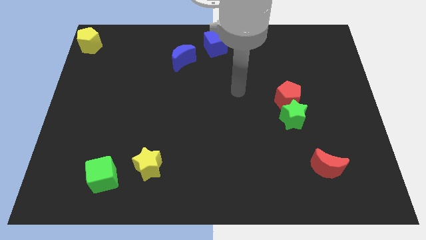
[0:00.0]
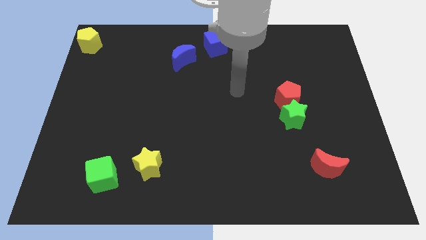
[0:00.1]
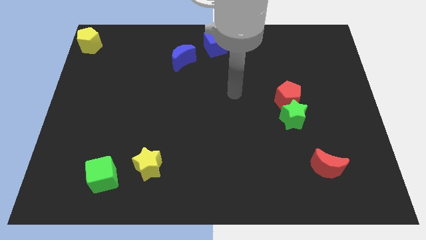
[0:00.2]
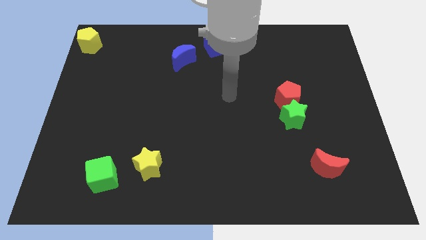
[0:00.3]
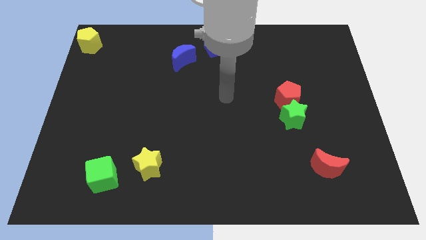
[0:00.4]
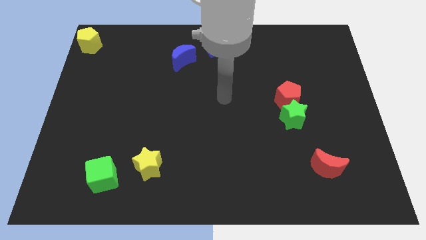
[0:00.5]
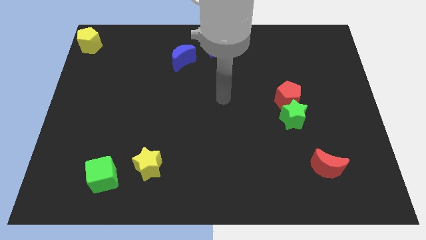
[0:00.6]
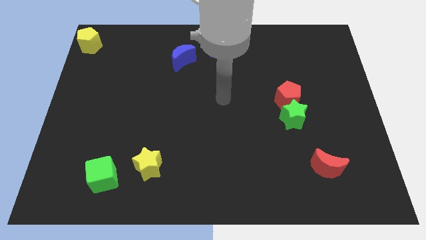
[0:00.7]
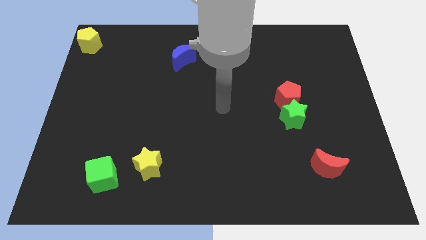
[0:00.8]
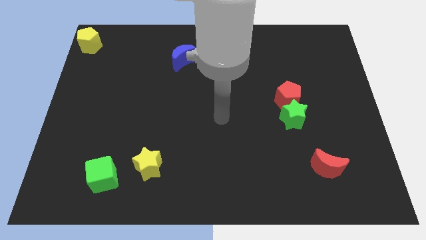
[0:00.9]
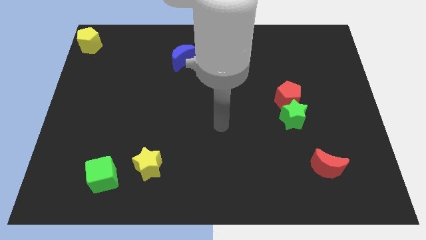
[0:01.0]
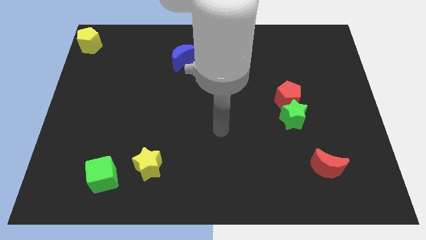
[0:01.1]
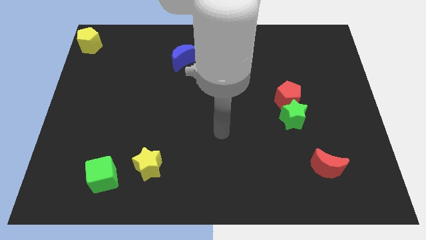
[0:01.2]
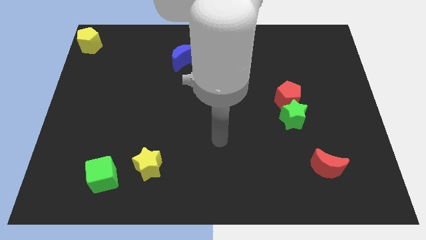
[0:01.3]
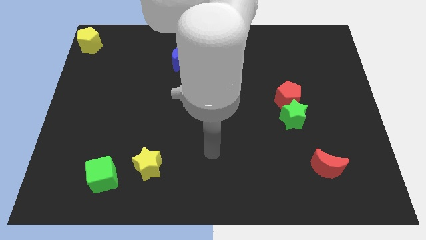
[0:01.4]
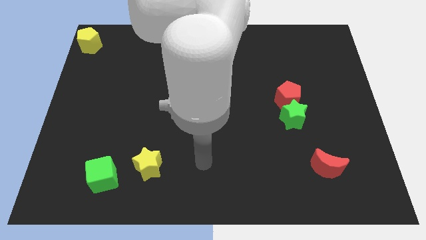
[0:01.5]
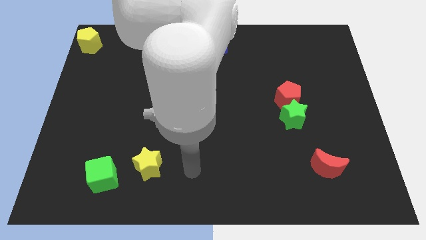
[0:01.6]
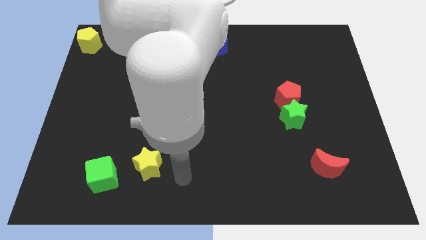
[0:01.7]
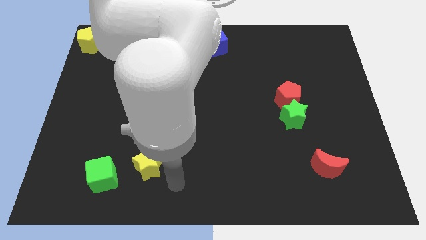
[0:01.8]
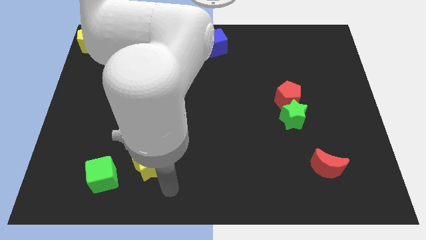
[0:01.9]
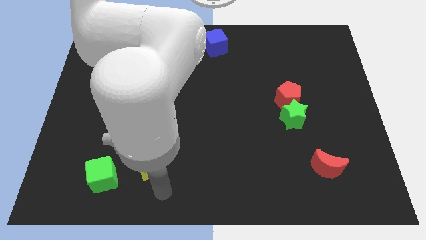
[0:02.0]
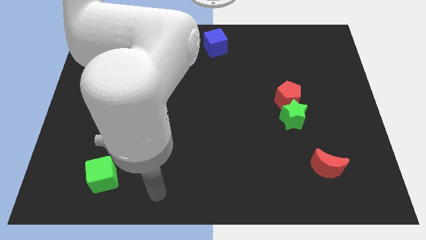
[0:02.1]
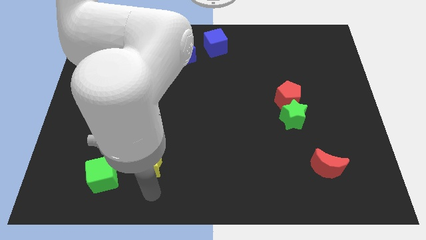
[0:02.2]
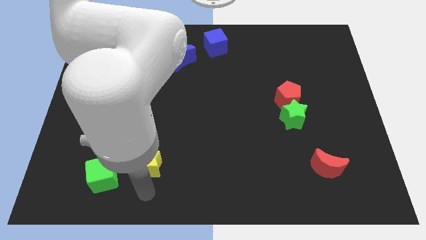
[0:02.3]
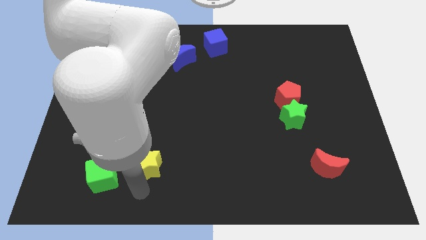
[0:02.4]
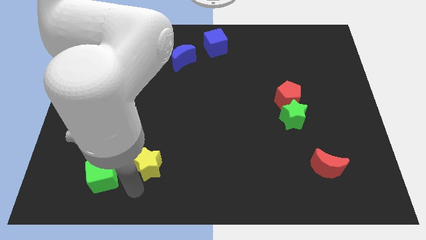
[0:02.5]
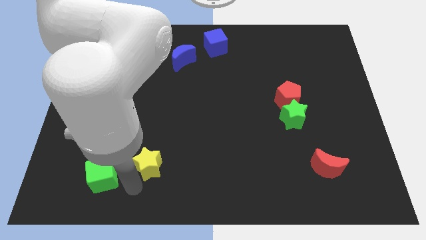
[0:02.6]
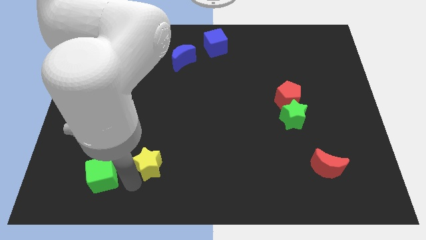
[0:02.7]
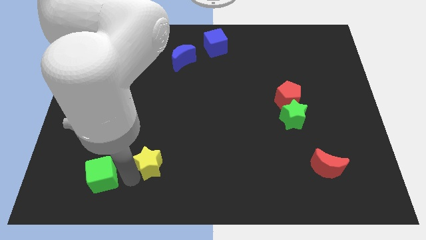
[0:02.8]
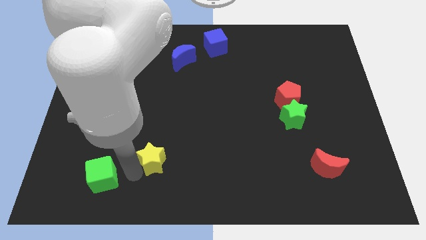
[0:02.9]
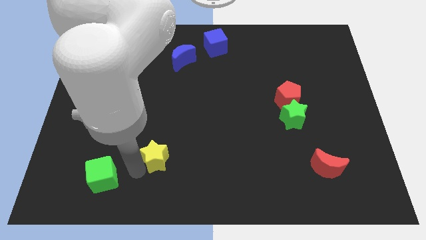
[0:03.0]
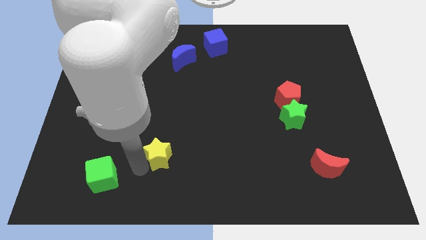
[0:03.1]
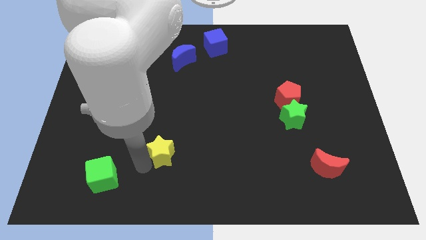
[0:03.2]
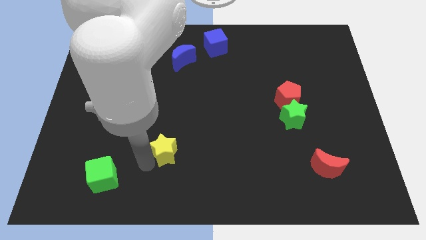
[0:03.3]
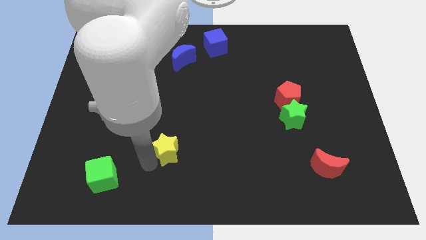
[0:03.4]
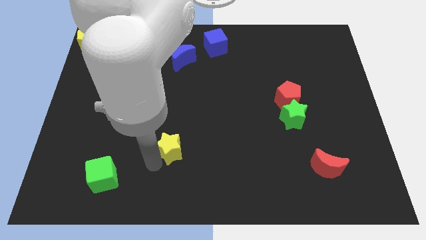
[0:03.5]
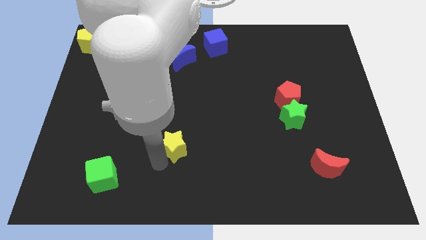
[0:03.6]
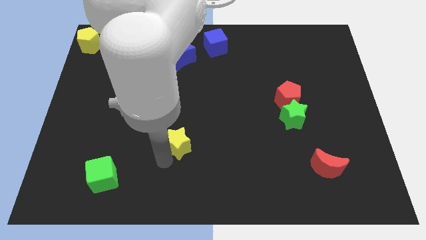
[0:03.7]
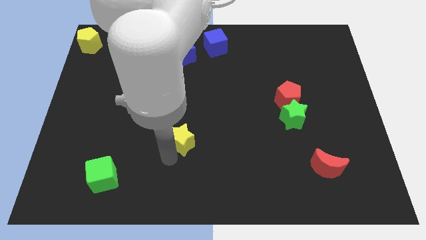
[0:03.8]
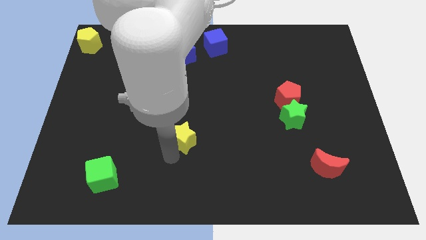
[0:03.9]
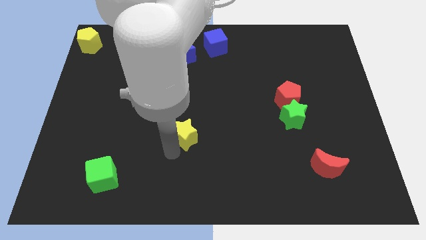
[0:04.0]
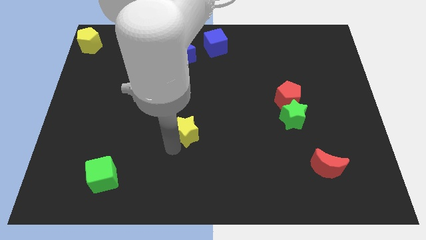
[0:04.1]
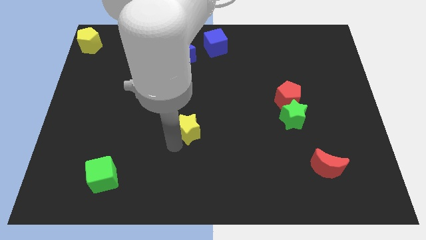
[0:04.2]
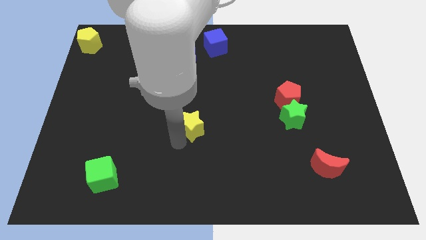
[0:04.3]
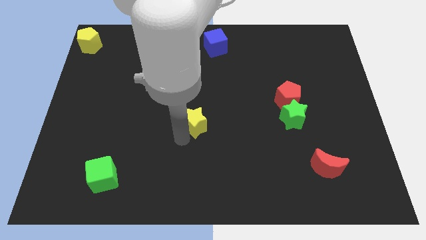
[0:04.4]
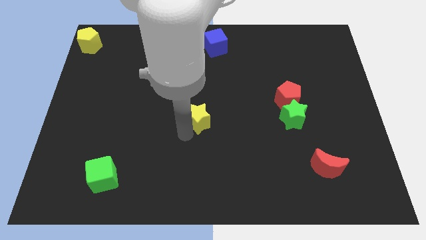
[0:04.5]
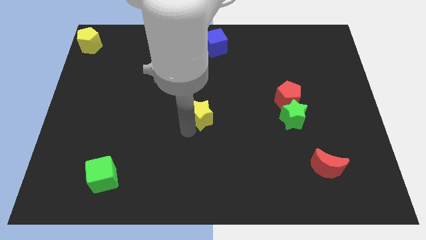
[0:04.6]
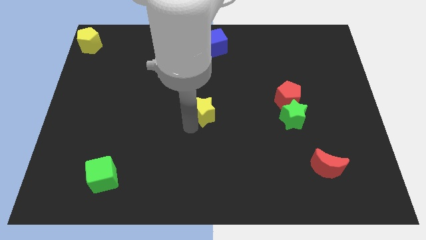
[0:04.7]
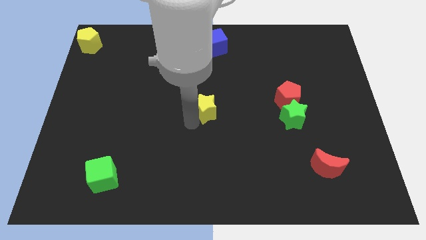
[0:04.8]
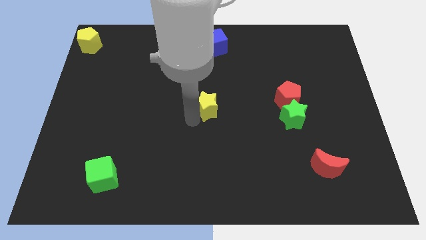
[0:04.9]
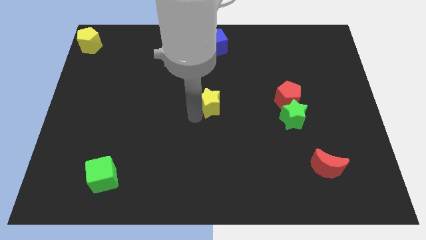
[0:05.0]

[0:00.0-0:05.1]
put the yellow star to the left of the red pentagon

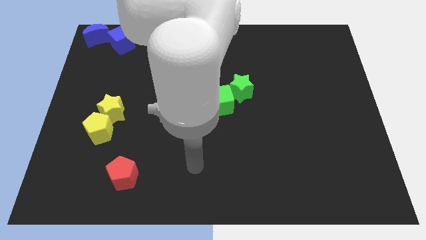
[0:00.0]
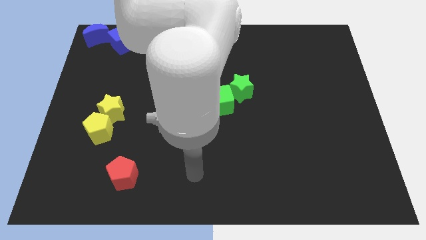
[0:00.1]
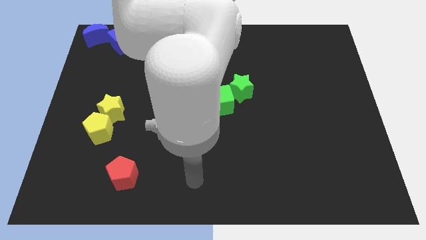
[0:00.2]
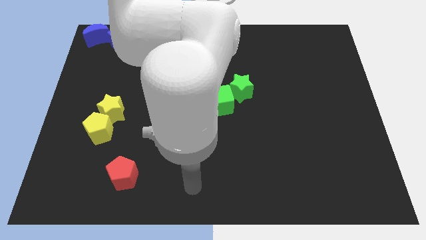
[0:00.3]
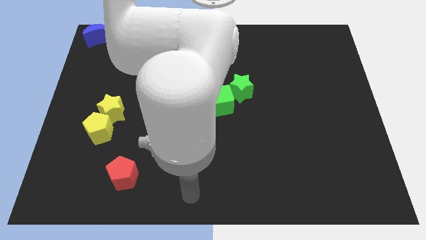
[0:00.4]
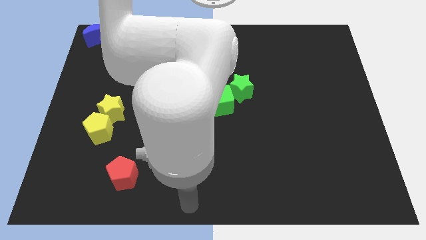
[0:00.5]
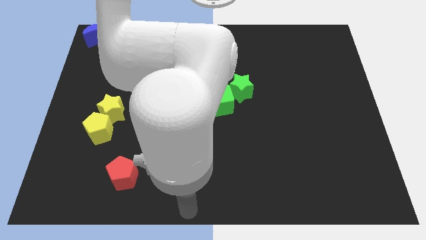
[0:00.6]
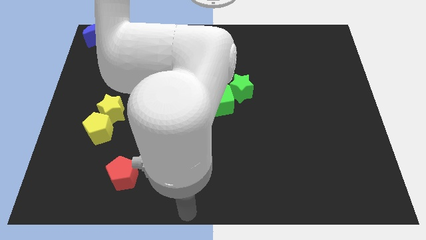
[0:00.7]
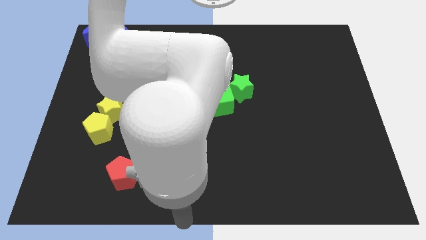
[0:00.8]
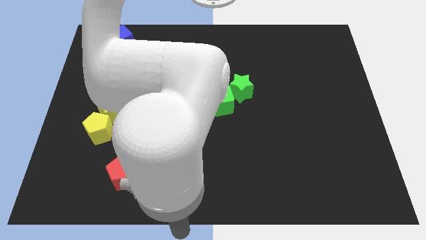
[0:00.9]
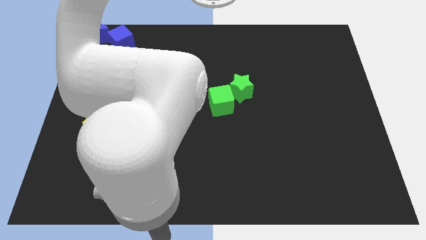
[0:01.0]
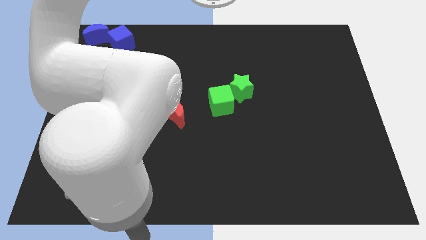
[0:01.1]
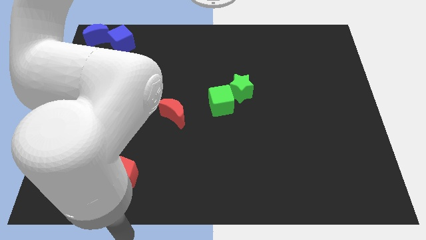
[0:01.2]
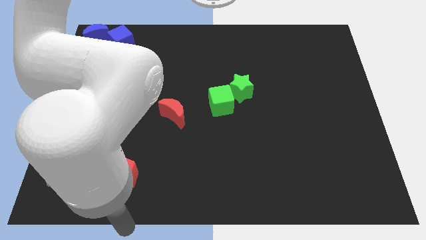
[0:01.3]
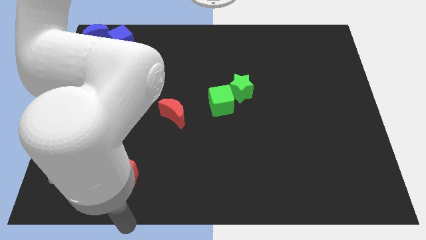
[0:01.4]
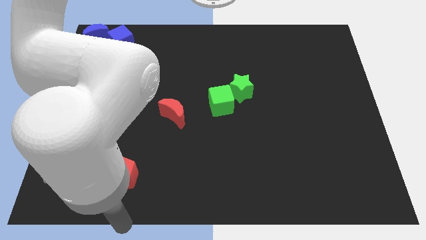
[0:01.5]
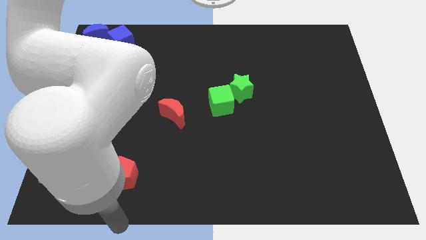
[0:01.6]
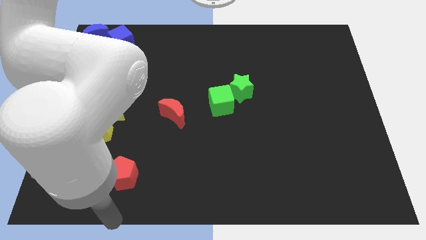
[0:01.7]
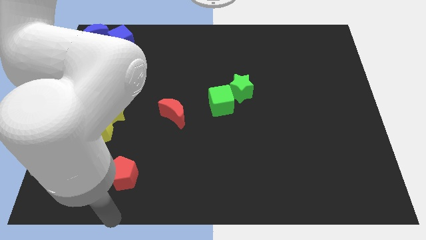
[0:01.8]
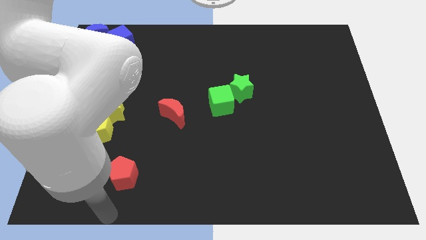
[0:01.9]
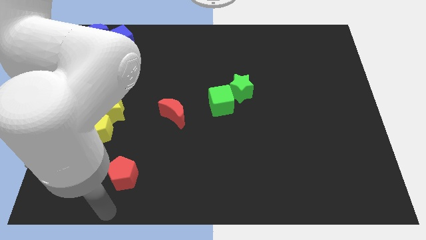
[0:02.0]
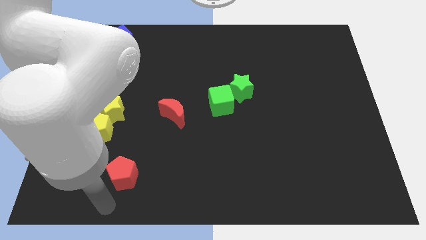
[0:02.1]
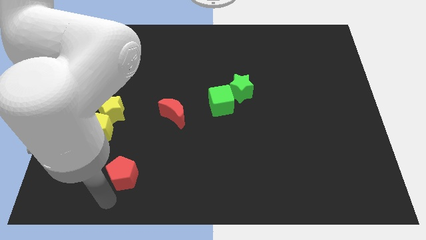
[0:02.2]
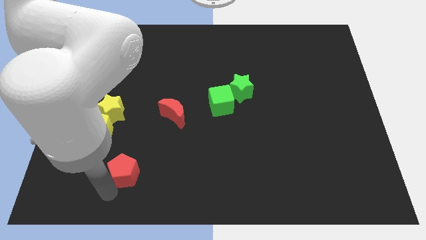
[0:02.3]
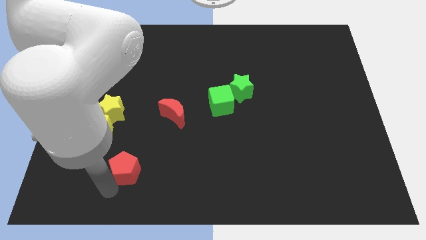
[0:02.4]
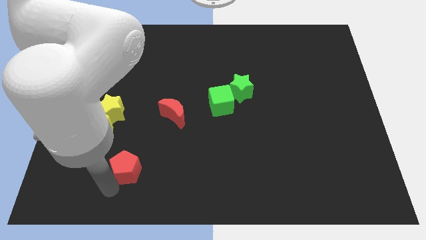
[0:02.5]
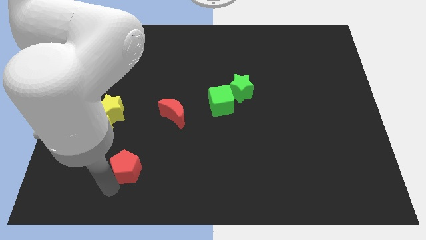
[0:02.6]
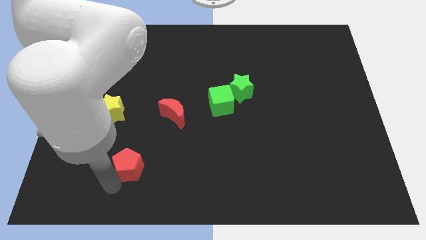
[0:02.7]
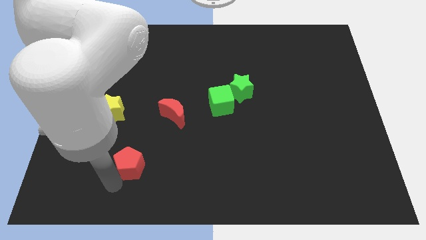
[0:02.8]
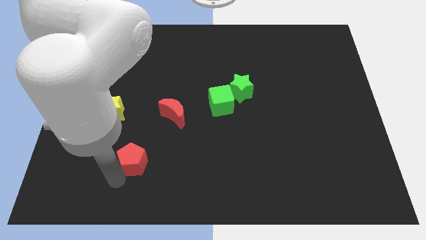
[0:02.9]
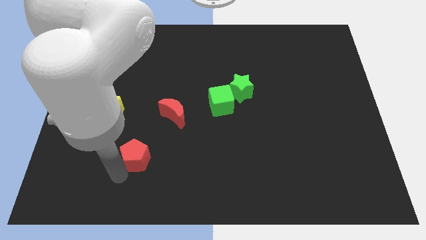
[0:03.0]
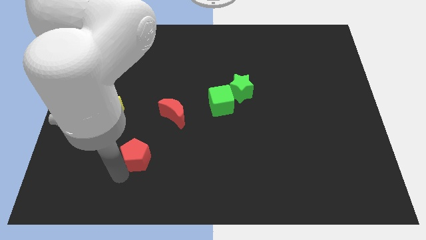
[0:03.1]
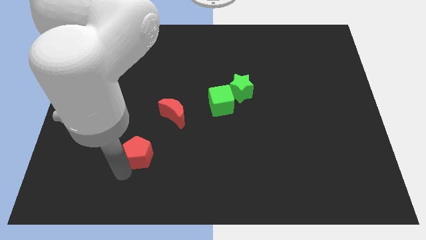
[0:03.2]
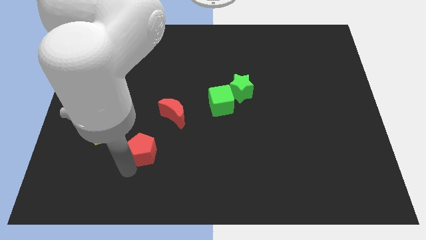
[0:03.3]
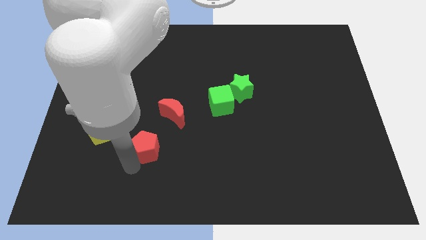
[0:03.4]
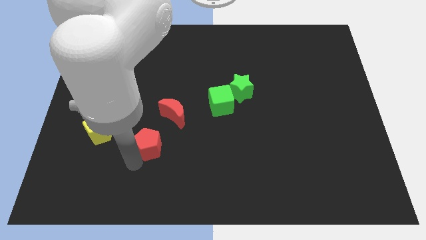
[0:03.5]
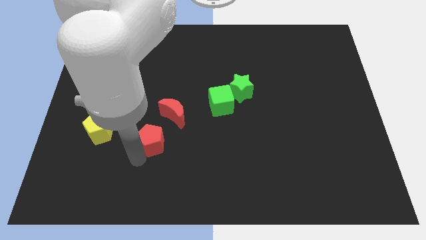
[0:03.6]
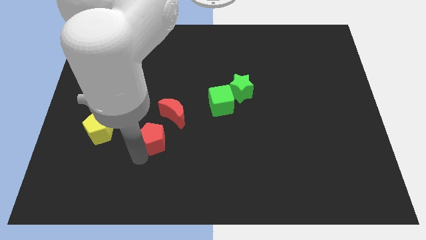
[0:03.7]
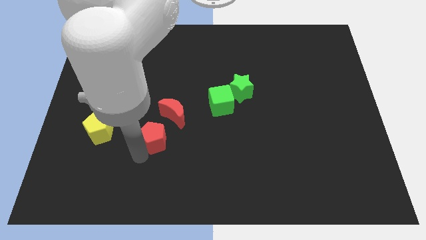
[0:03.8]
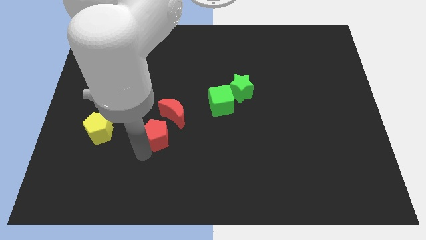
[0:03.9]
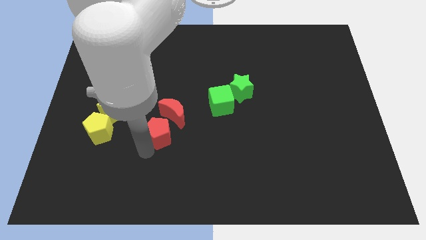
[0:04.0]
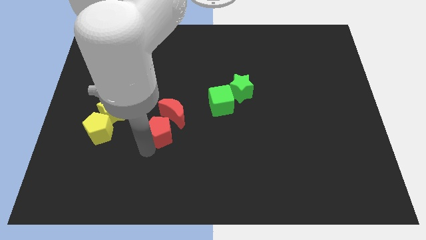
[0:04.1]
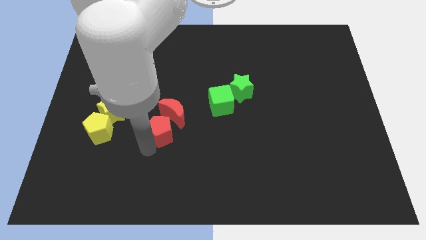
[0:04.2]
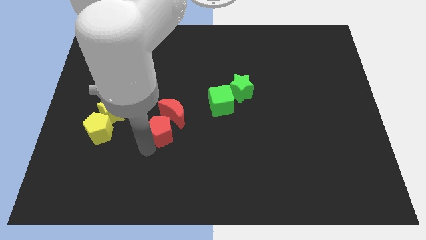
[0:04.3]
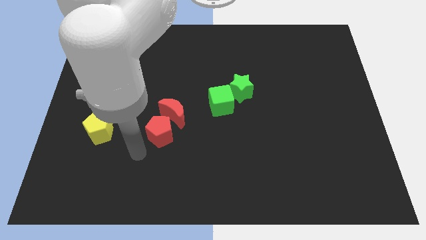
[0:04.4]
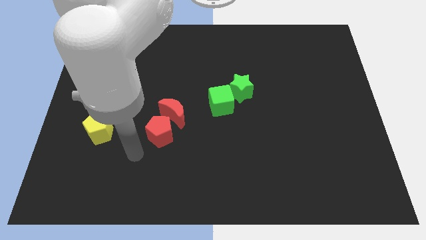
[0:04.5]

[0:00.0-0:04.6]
move the red pentagon into the red moon
